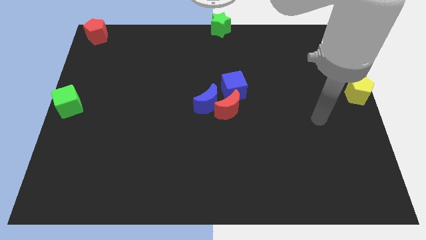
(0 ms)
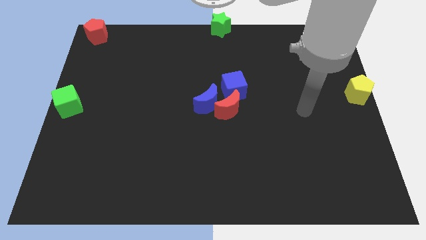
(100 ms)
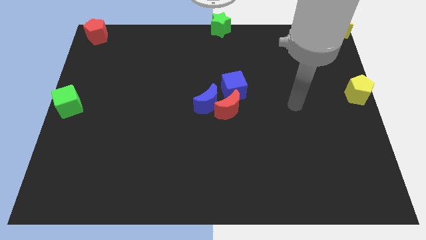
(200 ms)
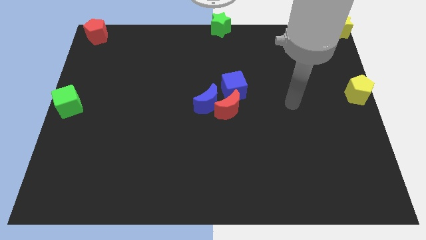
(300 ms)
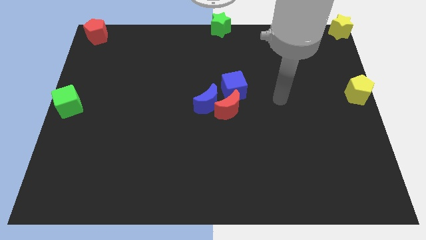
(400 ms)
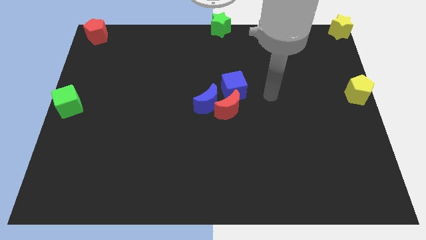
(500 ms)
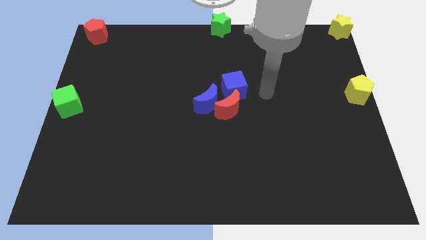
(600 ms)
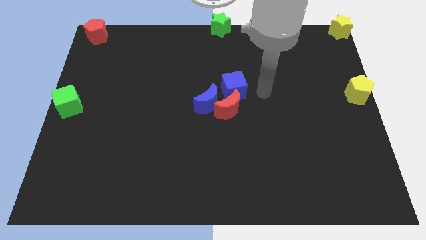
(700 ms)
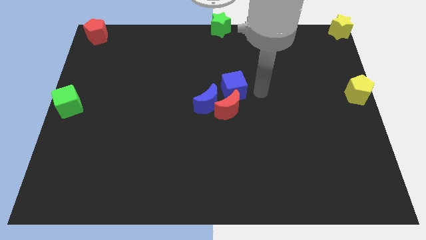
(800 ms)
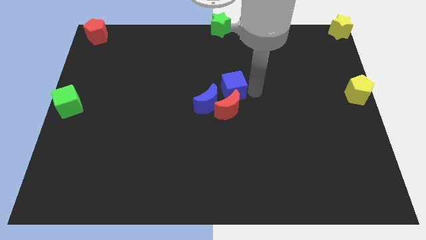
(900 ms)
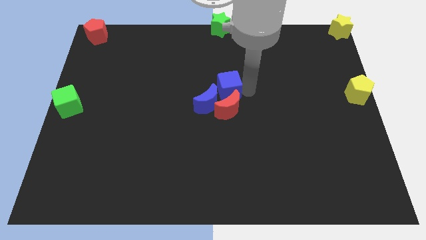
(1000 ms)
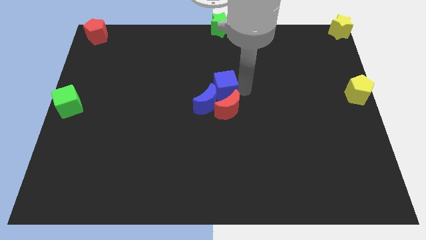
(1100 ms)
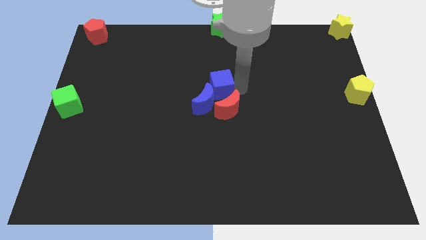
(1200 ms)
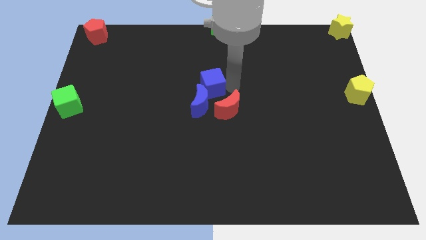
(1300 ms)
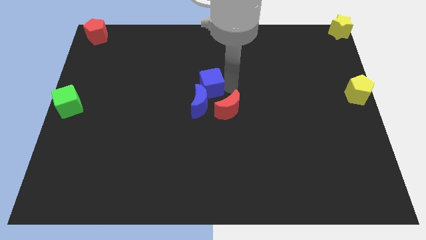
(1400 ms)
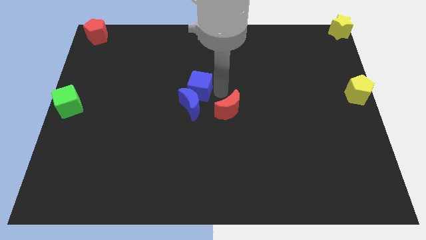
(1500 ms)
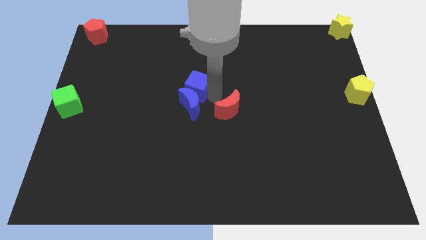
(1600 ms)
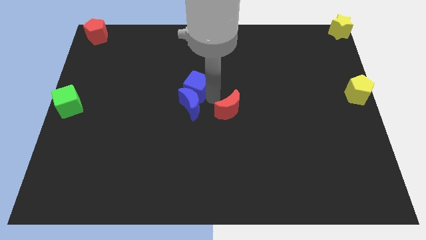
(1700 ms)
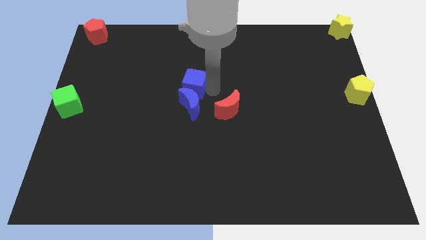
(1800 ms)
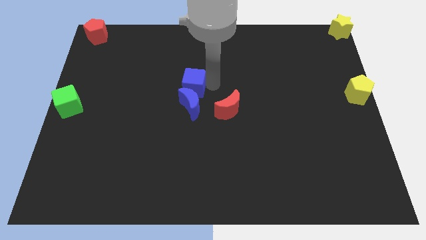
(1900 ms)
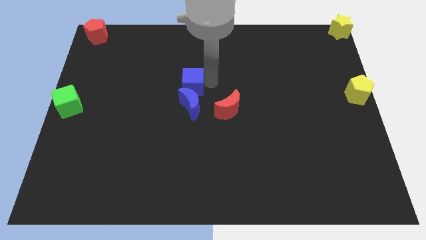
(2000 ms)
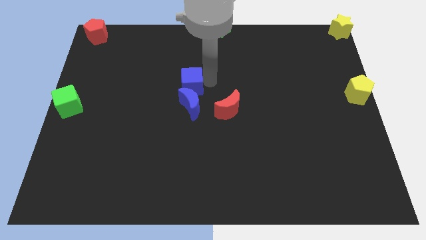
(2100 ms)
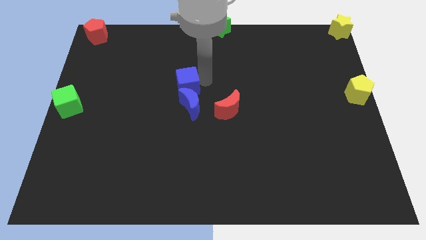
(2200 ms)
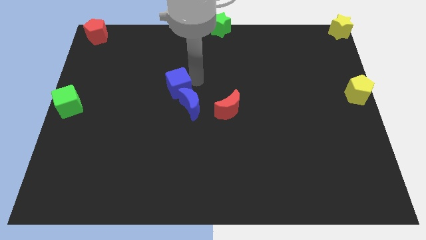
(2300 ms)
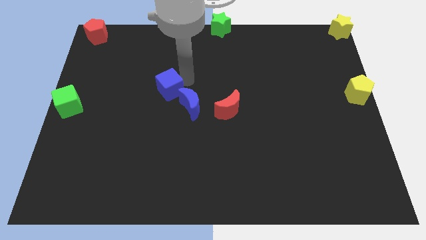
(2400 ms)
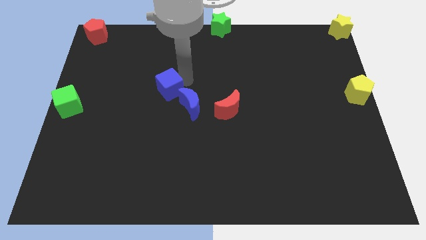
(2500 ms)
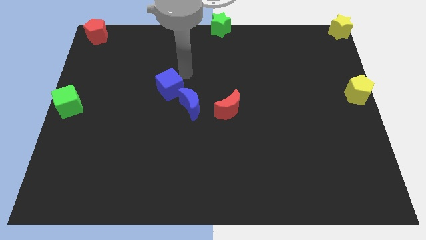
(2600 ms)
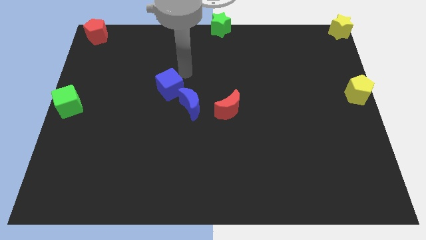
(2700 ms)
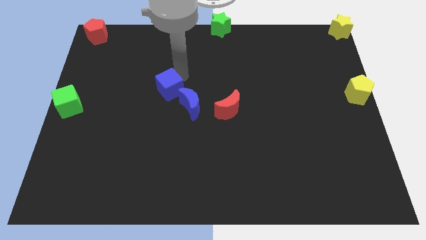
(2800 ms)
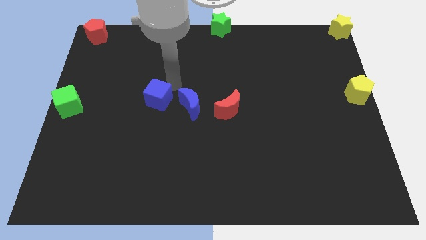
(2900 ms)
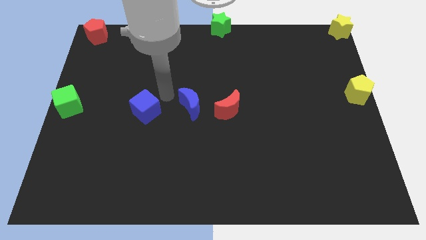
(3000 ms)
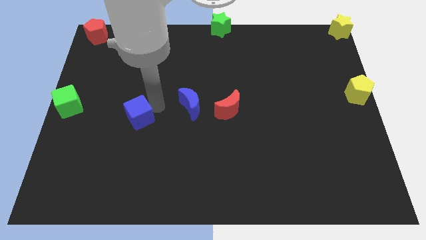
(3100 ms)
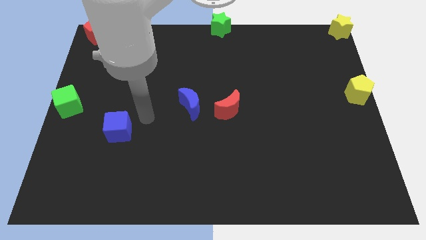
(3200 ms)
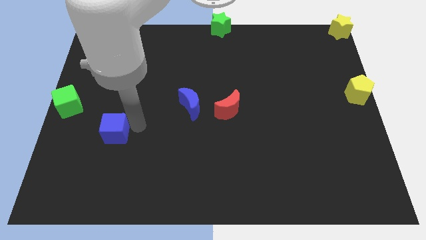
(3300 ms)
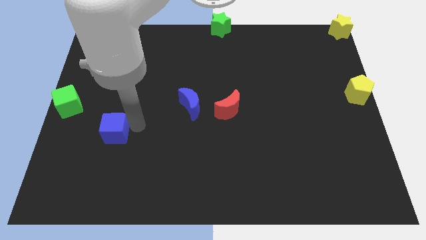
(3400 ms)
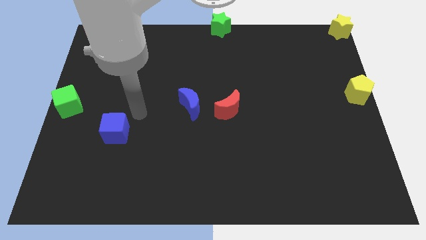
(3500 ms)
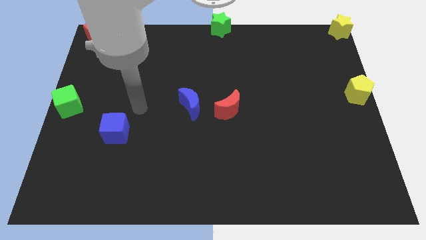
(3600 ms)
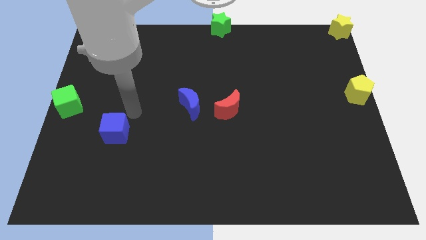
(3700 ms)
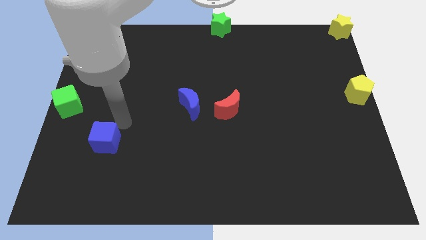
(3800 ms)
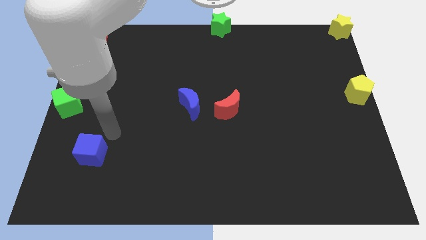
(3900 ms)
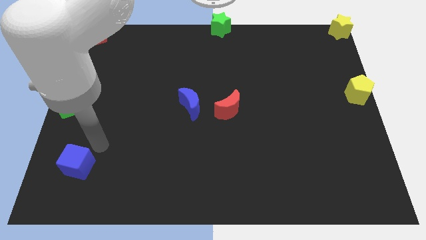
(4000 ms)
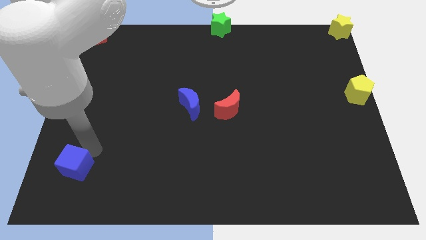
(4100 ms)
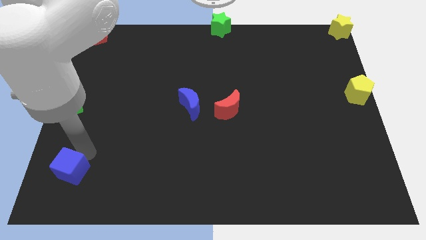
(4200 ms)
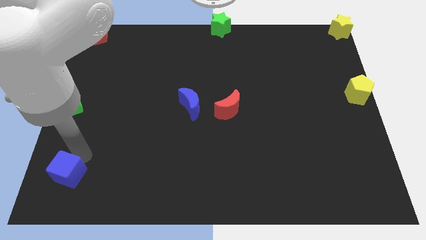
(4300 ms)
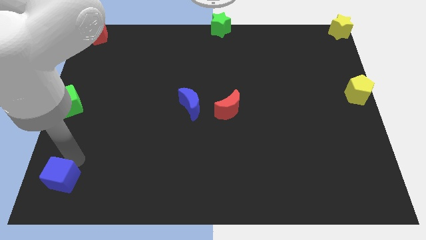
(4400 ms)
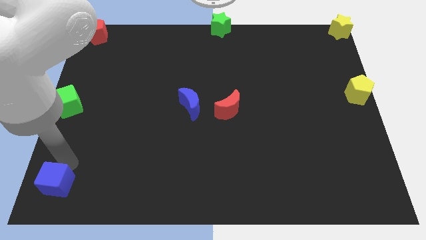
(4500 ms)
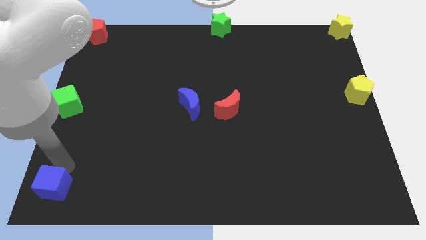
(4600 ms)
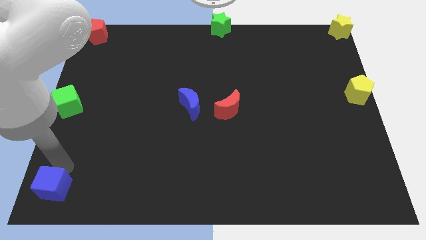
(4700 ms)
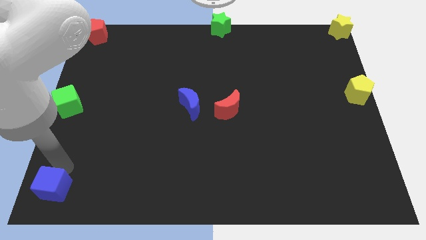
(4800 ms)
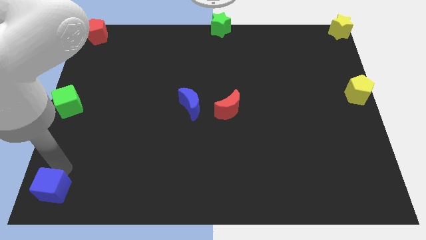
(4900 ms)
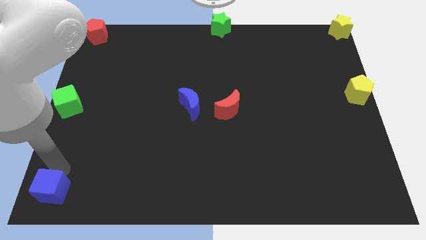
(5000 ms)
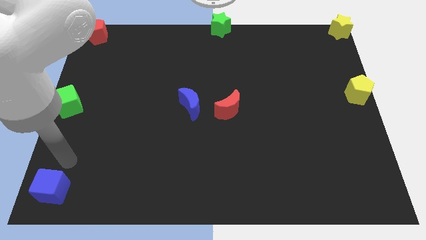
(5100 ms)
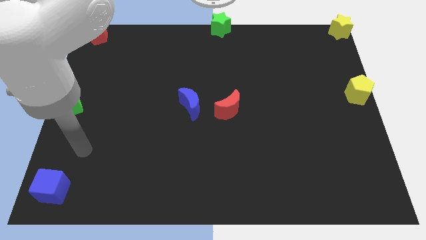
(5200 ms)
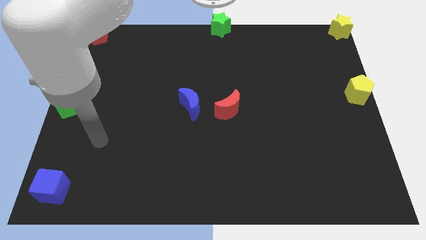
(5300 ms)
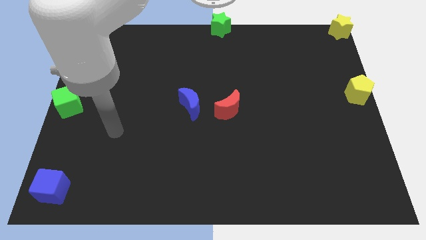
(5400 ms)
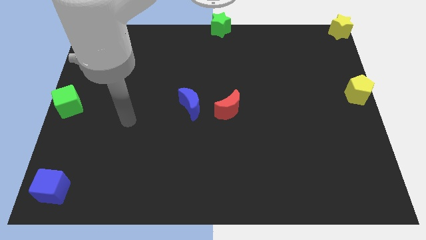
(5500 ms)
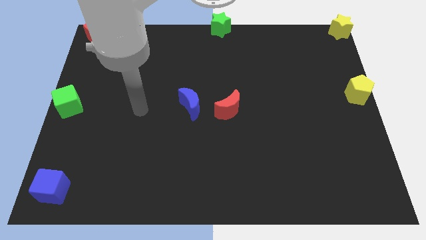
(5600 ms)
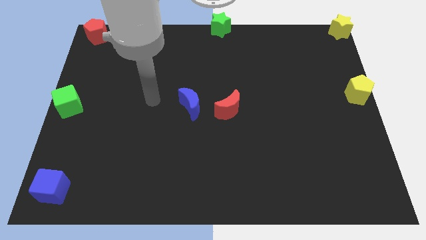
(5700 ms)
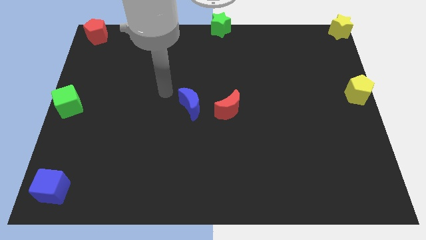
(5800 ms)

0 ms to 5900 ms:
place the blue cube in the bottom left of the board

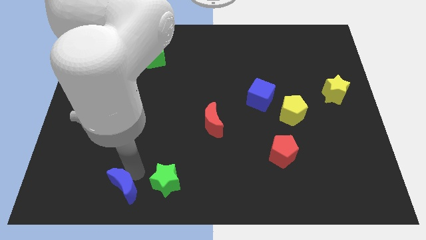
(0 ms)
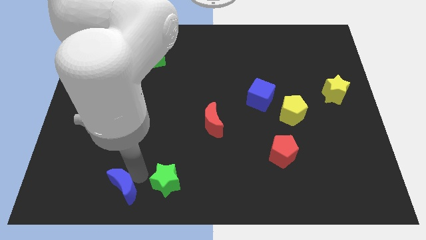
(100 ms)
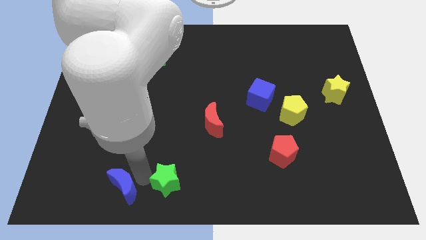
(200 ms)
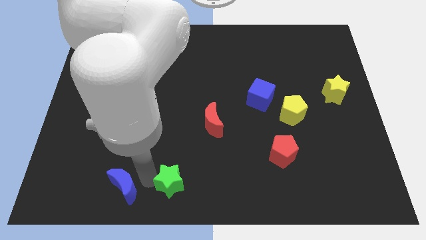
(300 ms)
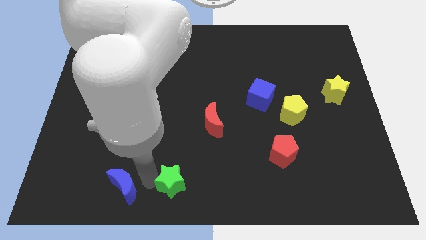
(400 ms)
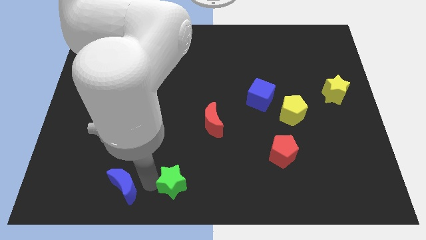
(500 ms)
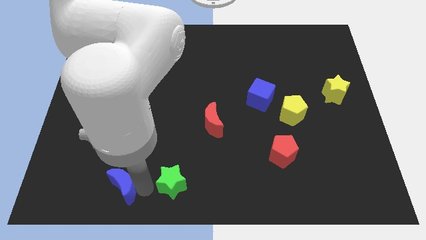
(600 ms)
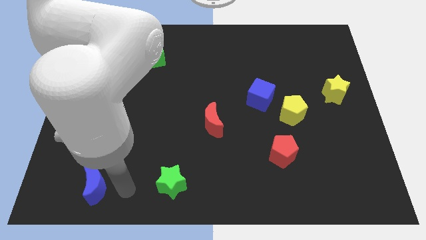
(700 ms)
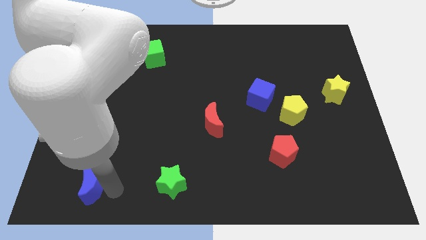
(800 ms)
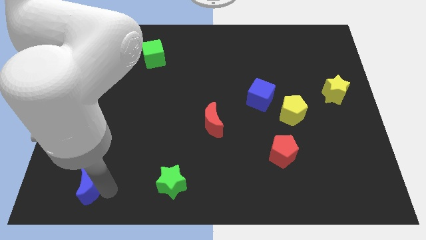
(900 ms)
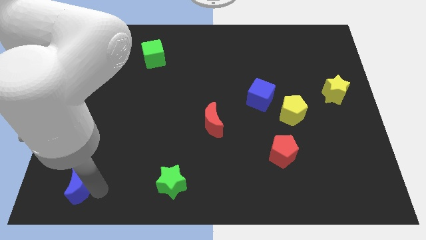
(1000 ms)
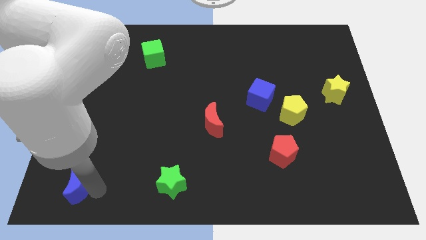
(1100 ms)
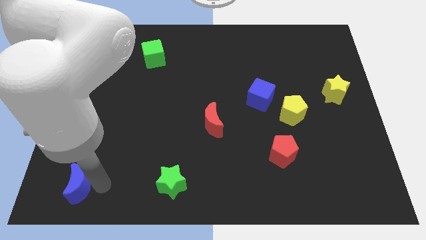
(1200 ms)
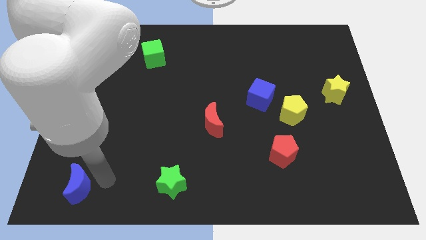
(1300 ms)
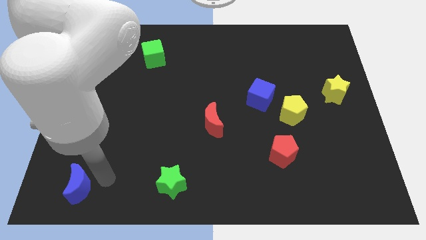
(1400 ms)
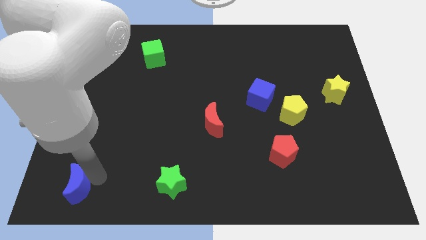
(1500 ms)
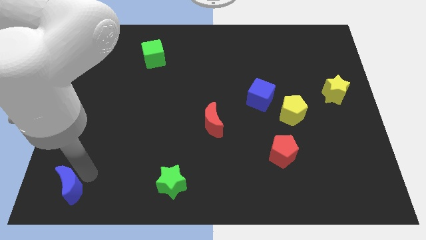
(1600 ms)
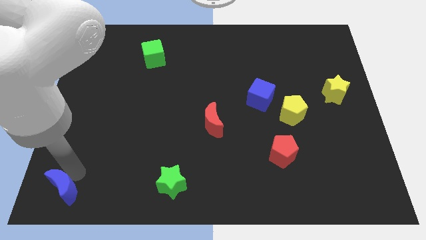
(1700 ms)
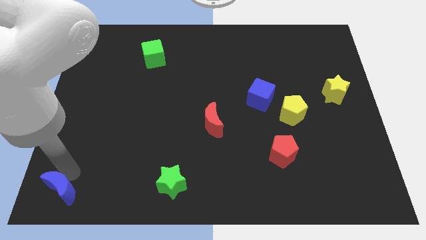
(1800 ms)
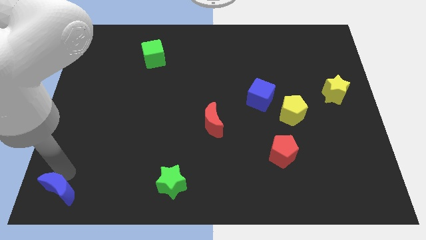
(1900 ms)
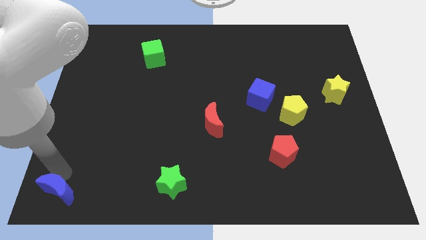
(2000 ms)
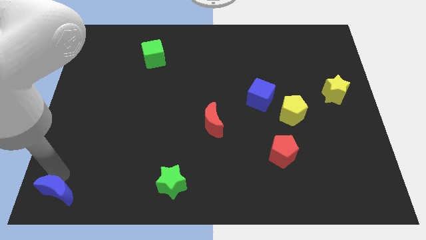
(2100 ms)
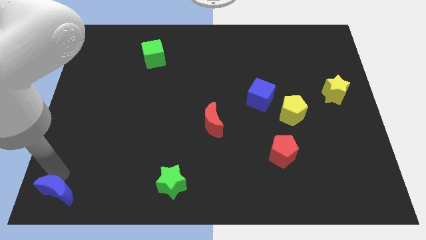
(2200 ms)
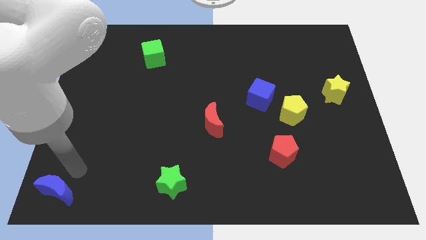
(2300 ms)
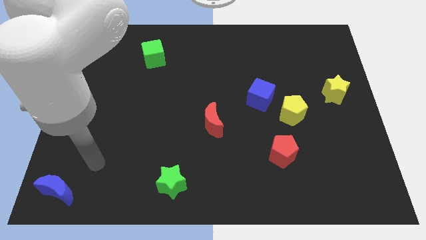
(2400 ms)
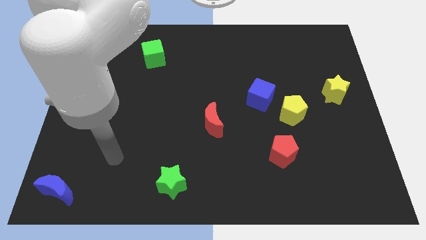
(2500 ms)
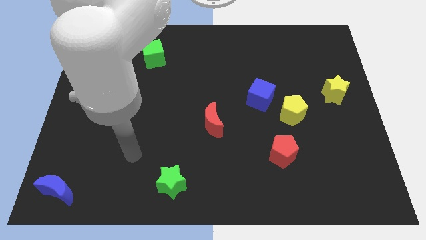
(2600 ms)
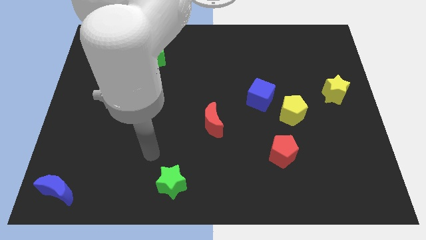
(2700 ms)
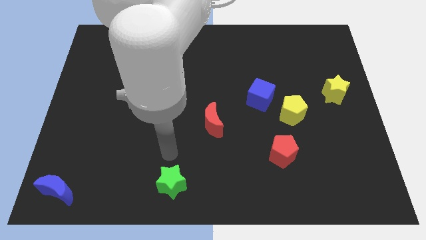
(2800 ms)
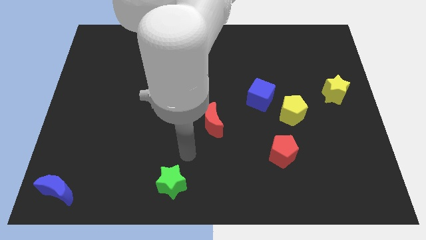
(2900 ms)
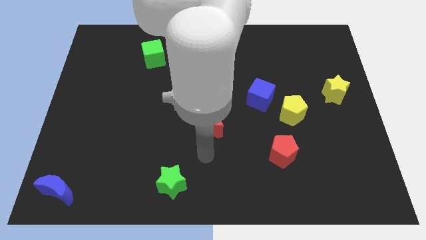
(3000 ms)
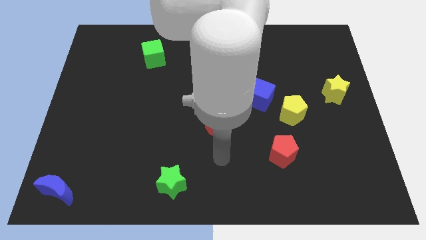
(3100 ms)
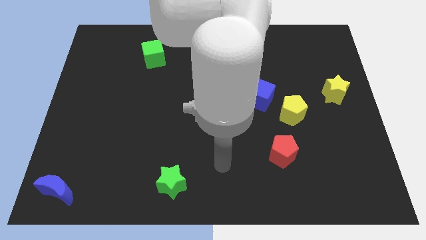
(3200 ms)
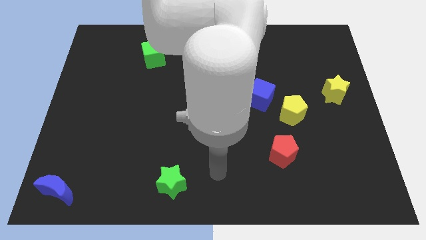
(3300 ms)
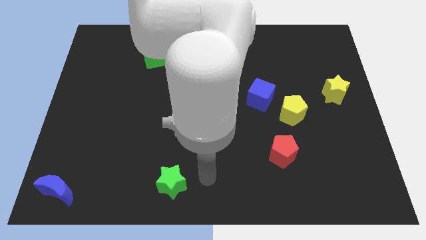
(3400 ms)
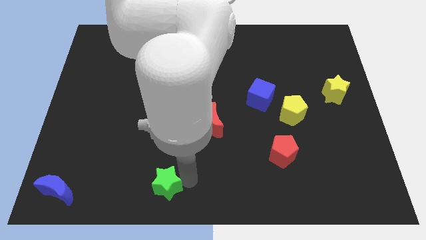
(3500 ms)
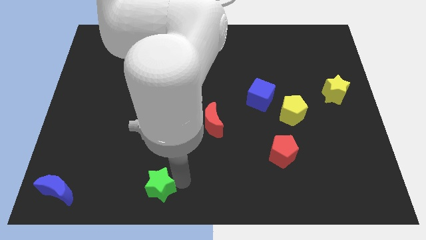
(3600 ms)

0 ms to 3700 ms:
push the blue crescent to the bottom left side
